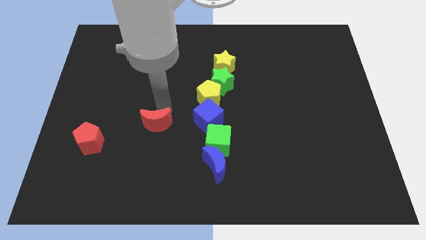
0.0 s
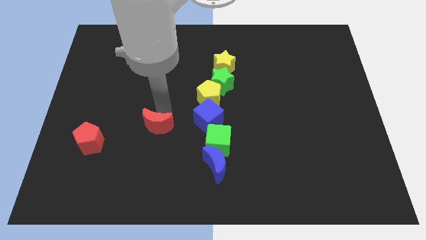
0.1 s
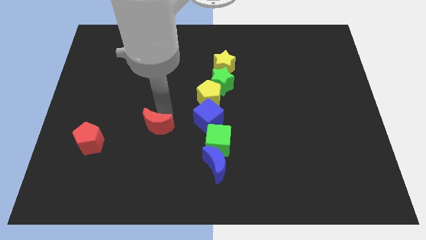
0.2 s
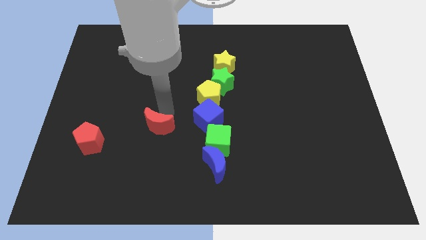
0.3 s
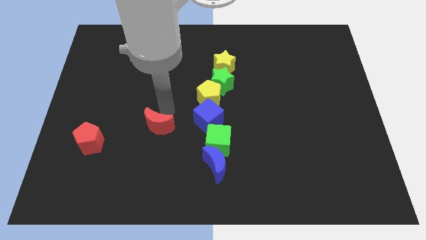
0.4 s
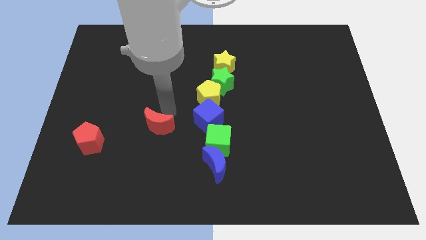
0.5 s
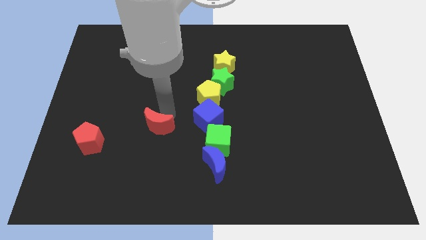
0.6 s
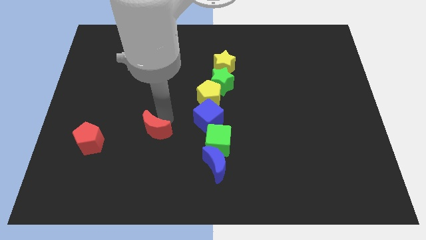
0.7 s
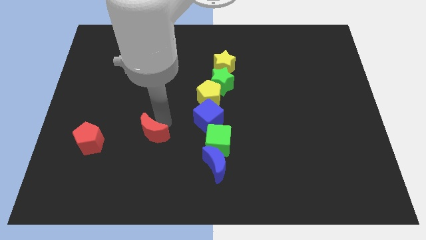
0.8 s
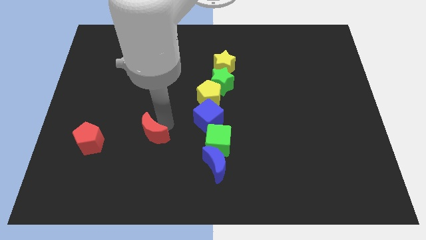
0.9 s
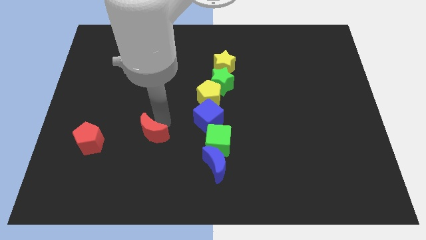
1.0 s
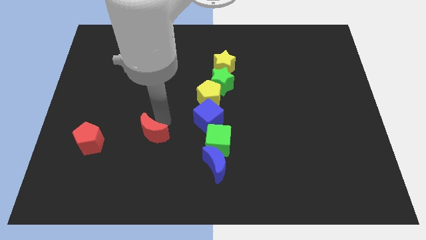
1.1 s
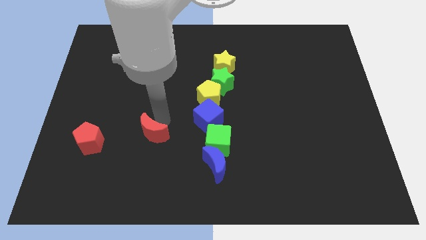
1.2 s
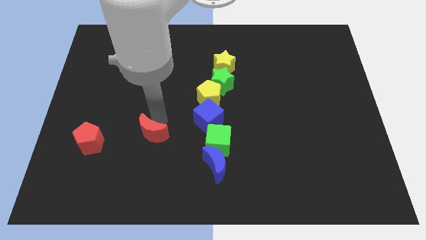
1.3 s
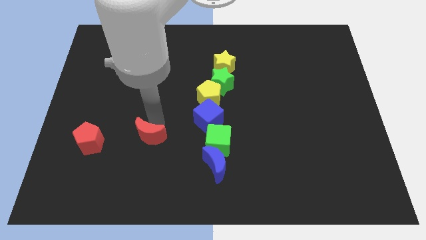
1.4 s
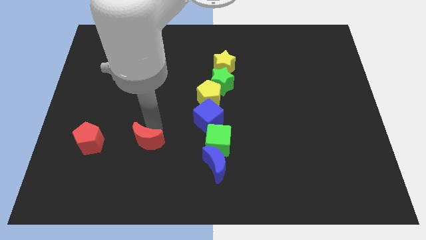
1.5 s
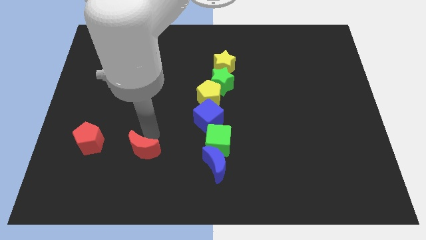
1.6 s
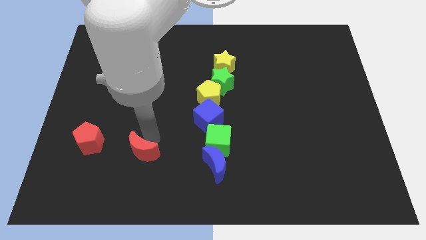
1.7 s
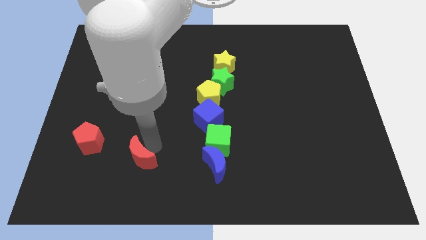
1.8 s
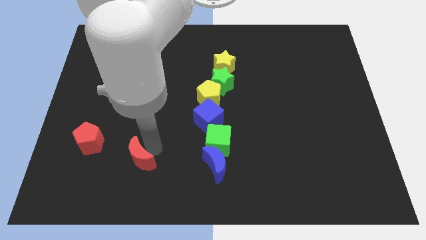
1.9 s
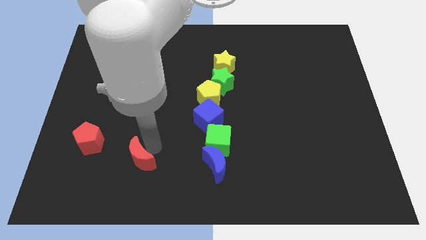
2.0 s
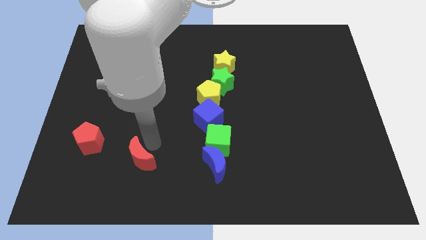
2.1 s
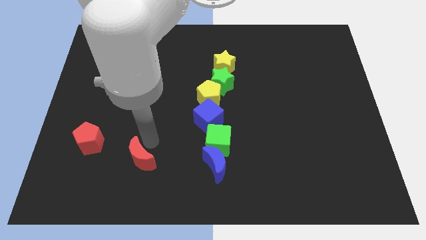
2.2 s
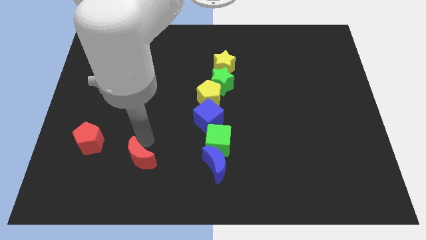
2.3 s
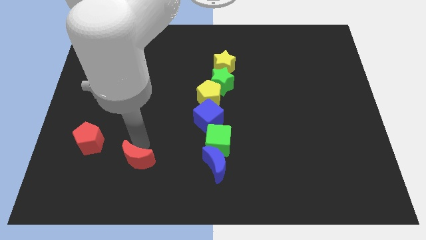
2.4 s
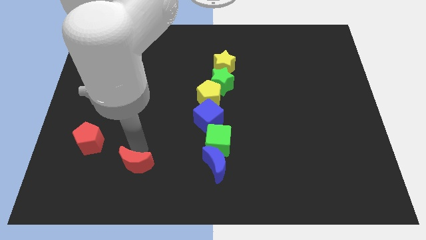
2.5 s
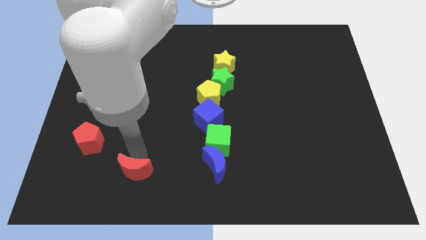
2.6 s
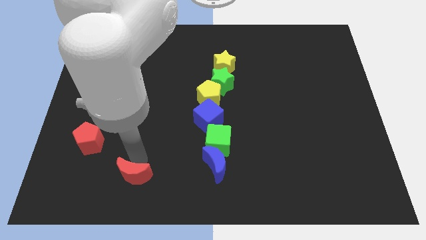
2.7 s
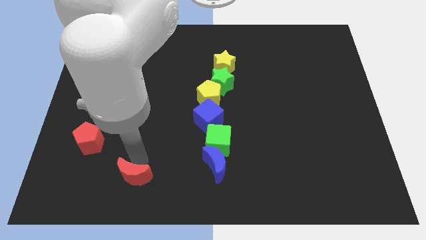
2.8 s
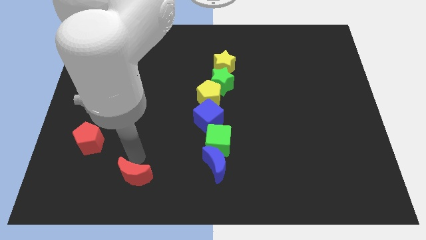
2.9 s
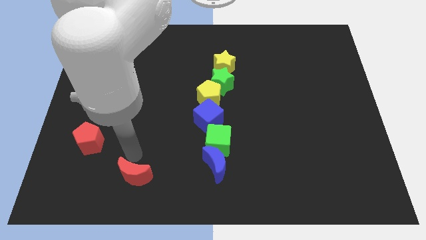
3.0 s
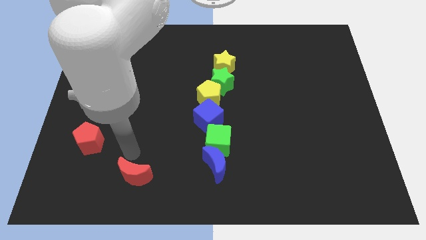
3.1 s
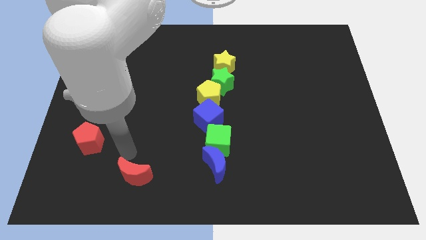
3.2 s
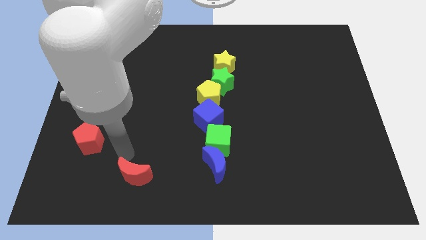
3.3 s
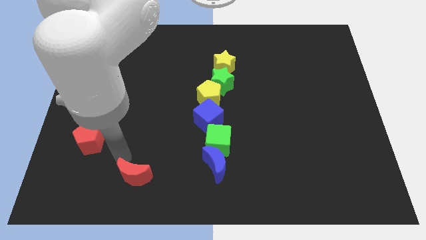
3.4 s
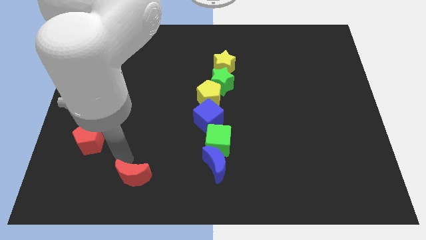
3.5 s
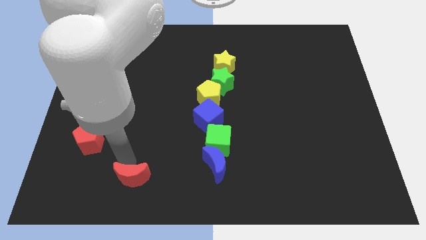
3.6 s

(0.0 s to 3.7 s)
move the red moon to the left of the blue moon

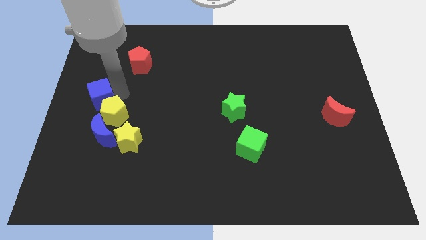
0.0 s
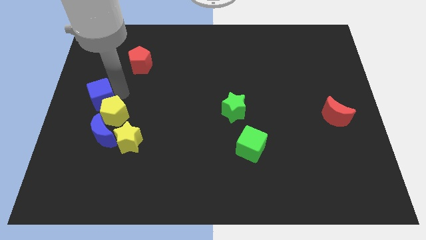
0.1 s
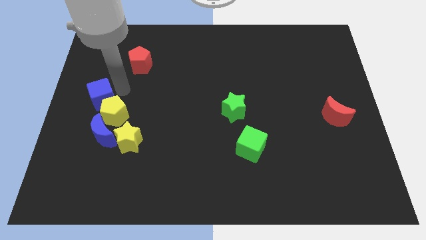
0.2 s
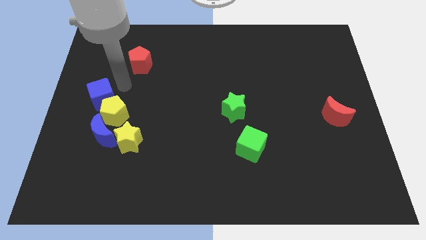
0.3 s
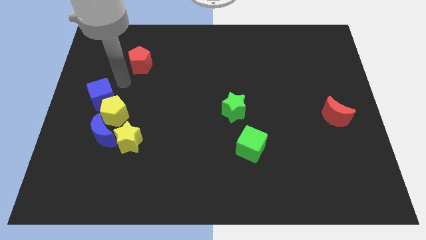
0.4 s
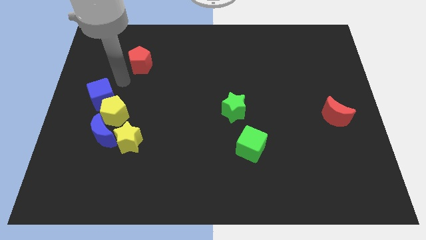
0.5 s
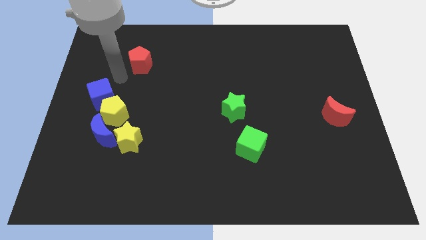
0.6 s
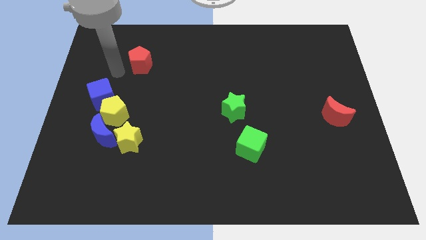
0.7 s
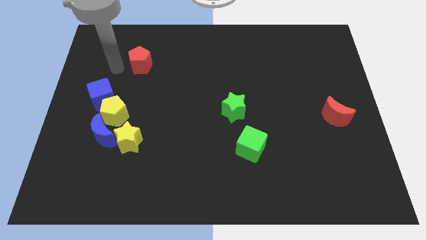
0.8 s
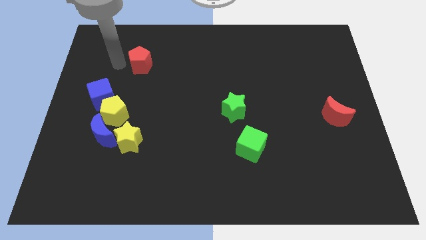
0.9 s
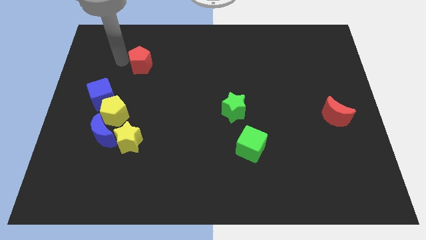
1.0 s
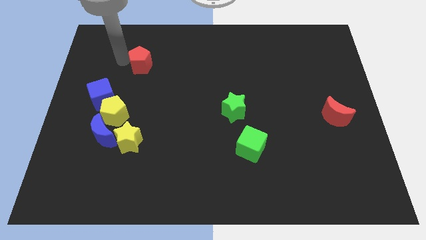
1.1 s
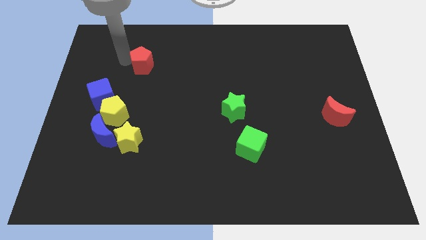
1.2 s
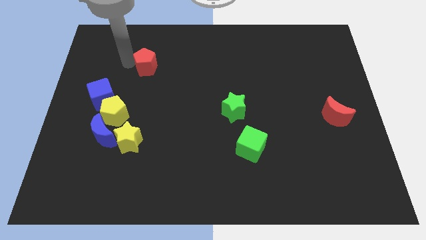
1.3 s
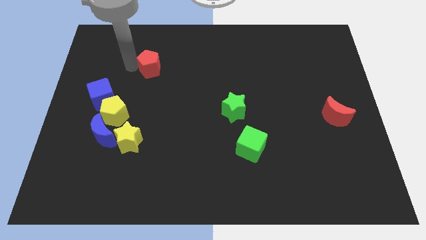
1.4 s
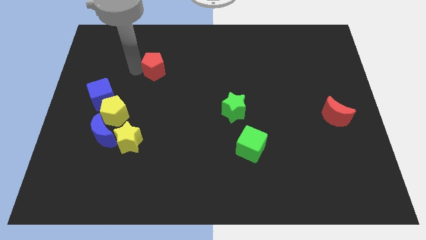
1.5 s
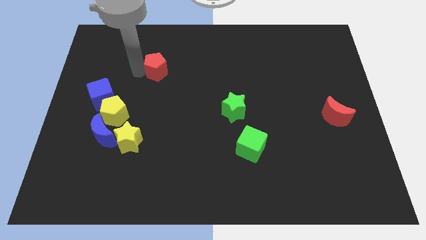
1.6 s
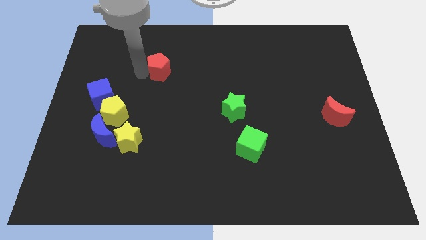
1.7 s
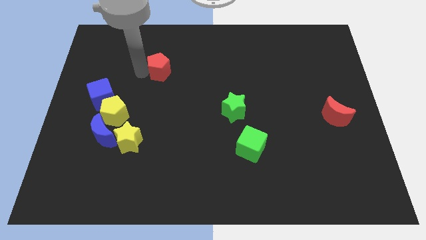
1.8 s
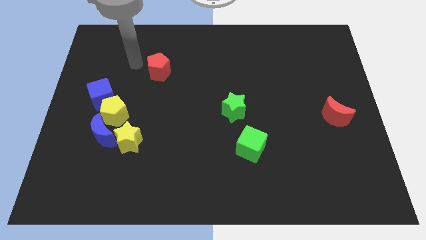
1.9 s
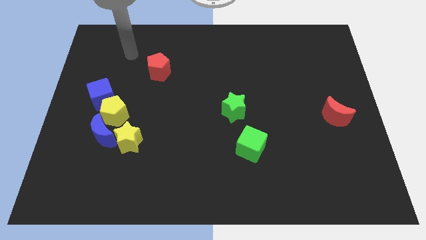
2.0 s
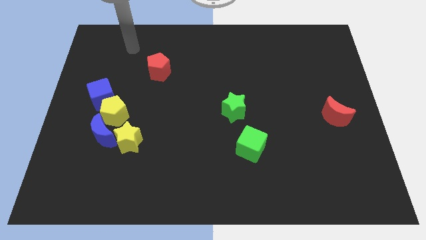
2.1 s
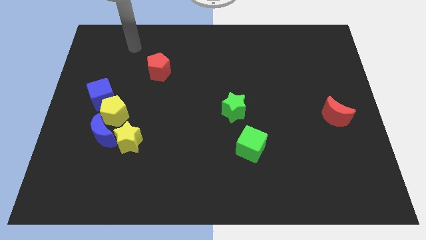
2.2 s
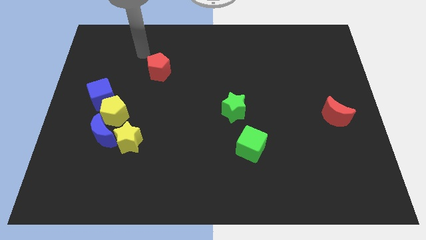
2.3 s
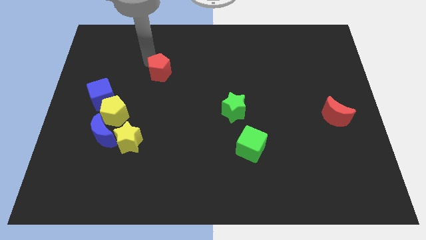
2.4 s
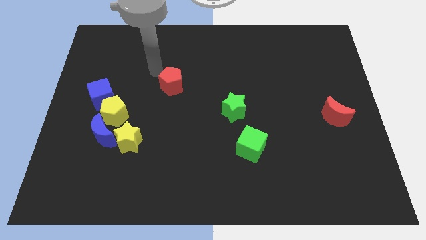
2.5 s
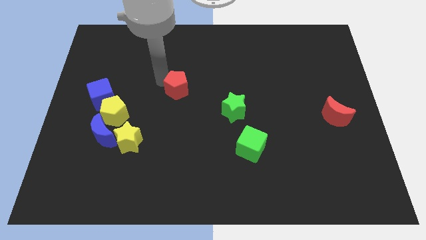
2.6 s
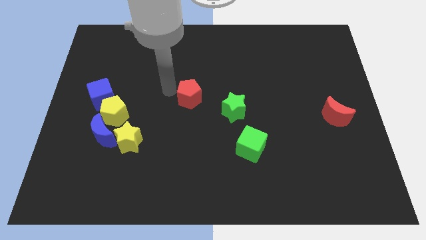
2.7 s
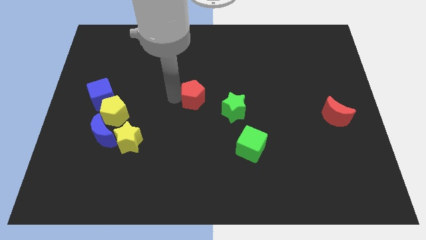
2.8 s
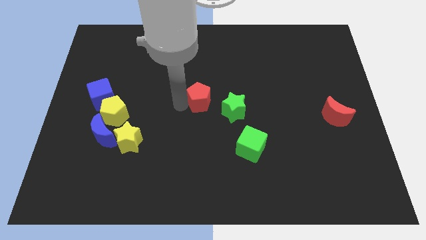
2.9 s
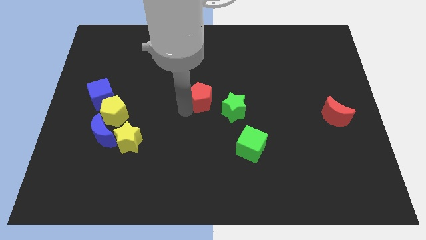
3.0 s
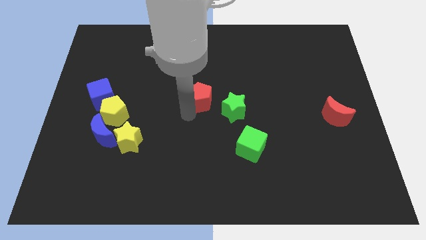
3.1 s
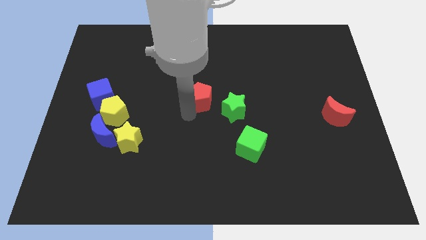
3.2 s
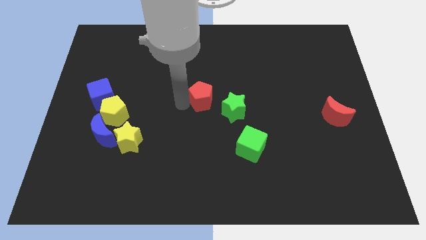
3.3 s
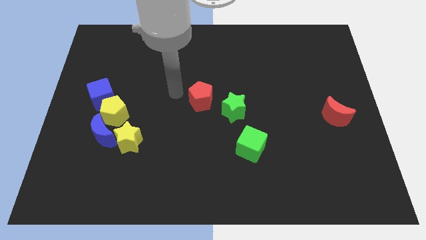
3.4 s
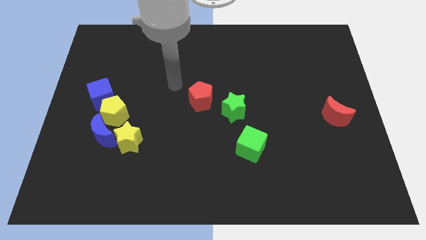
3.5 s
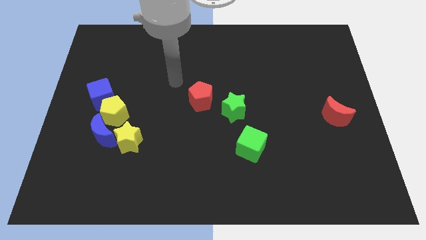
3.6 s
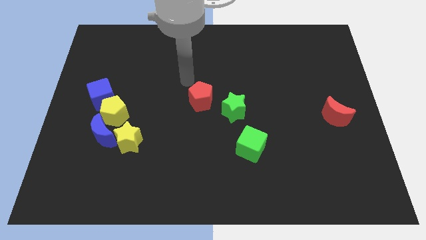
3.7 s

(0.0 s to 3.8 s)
place the red pentagon to the left of green star

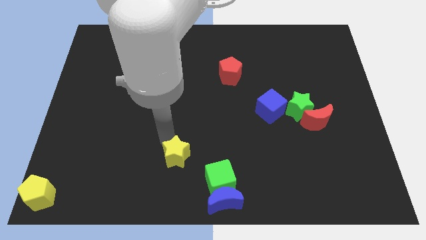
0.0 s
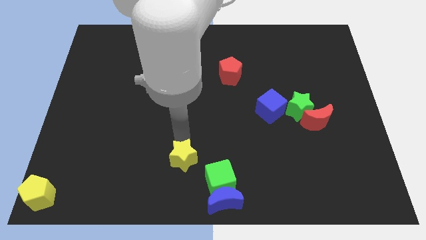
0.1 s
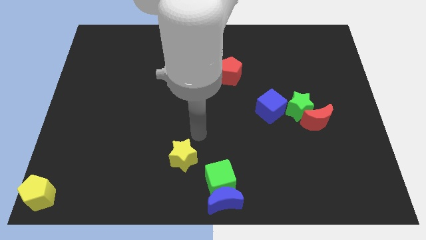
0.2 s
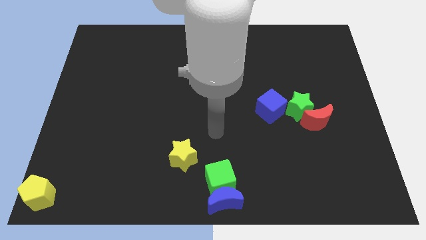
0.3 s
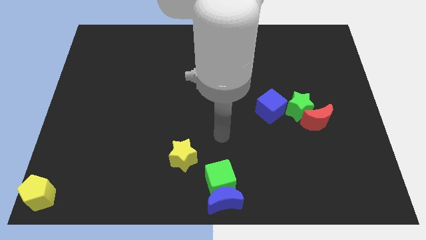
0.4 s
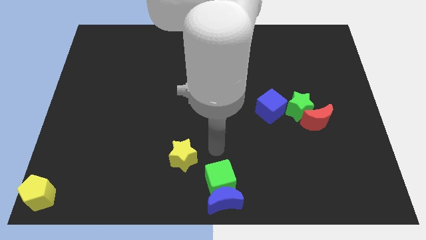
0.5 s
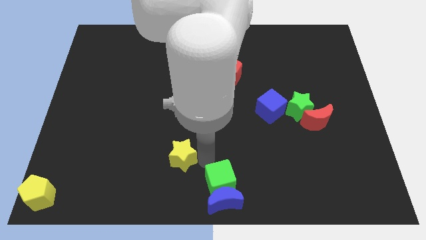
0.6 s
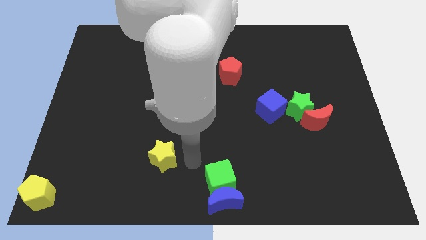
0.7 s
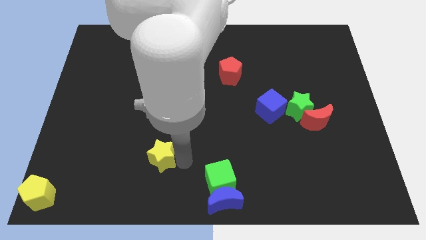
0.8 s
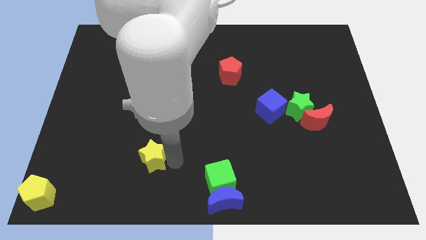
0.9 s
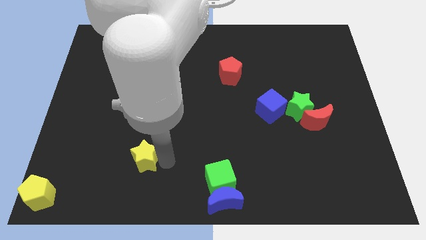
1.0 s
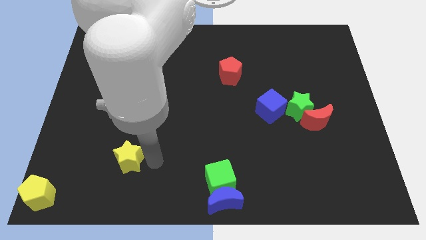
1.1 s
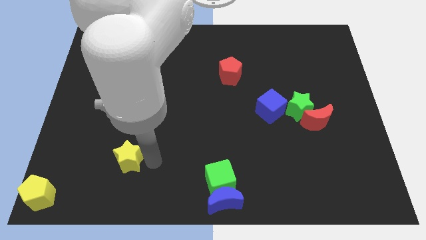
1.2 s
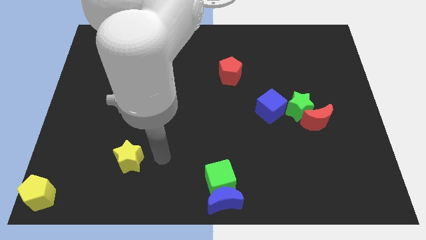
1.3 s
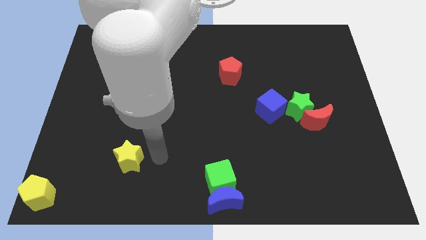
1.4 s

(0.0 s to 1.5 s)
drag the yellow star to the left

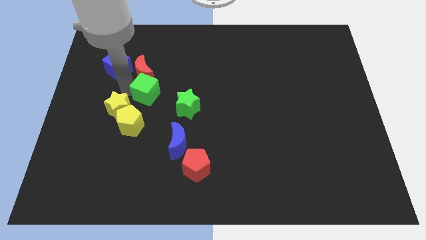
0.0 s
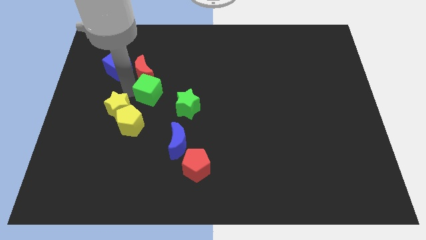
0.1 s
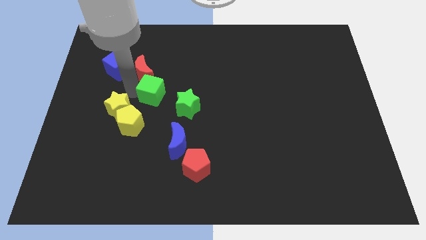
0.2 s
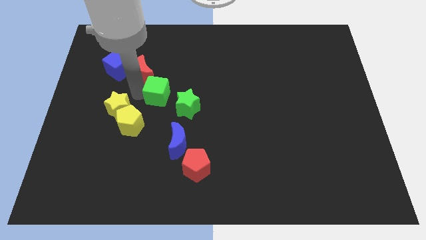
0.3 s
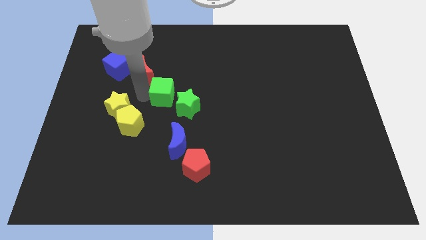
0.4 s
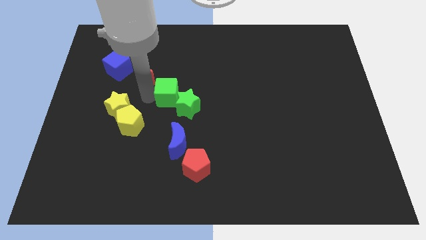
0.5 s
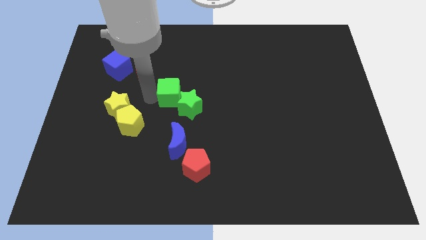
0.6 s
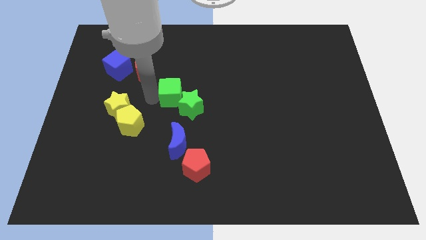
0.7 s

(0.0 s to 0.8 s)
push the green cube into the green star
